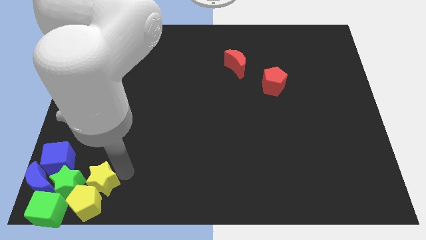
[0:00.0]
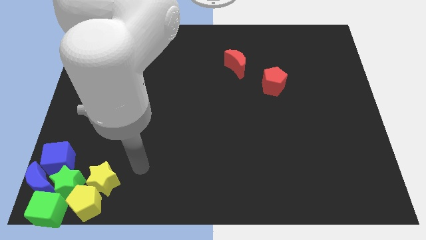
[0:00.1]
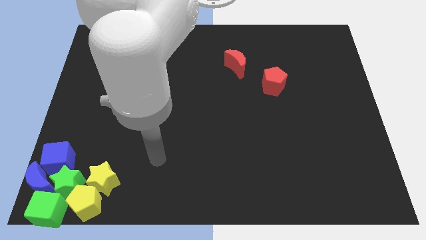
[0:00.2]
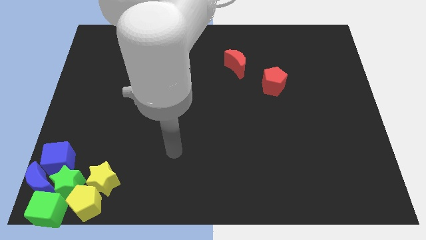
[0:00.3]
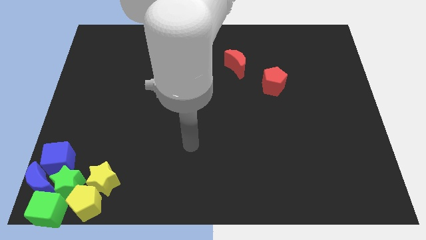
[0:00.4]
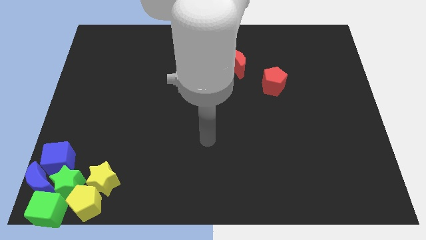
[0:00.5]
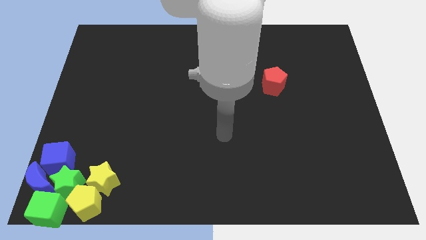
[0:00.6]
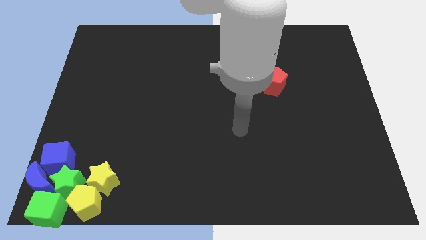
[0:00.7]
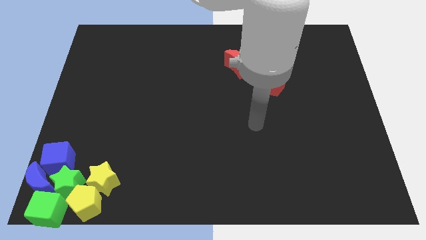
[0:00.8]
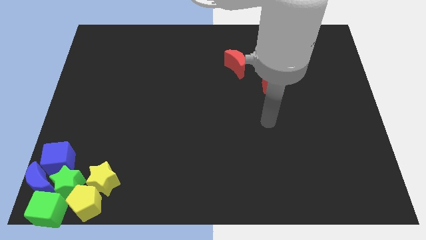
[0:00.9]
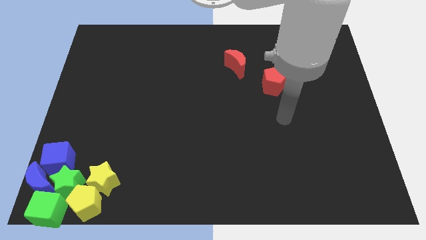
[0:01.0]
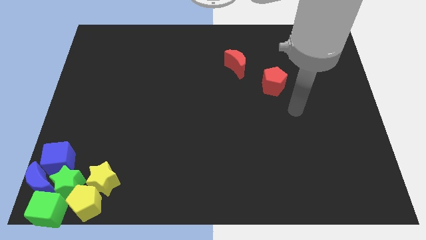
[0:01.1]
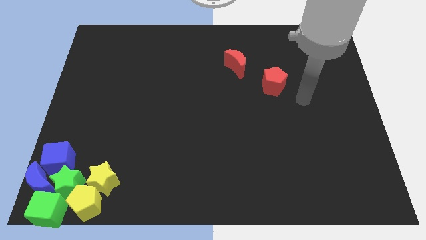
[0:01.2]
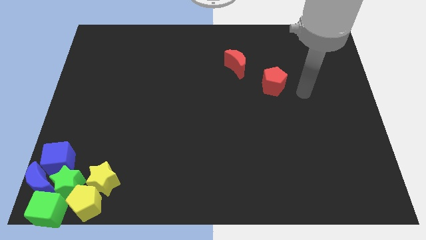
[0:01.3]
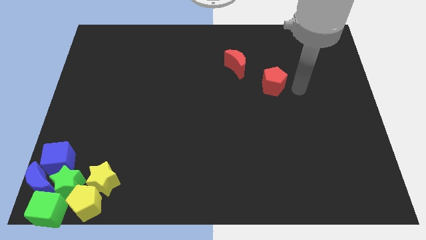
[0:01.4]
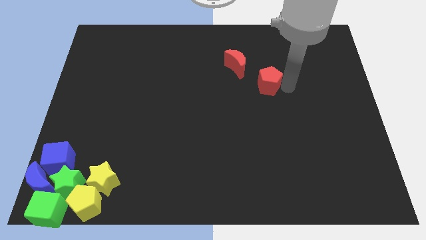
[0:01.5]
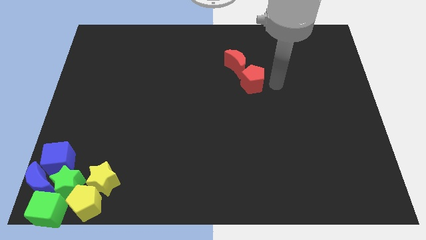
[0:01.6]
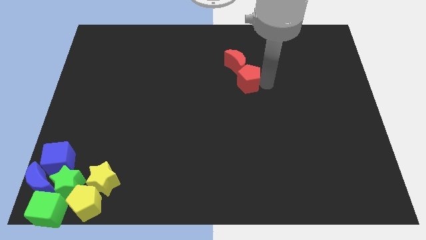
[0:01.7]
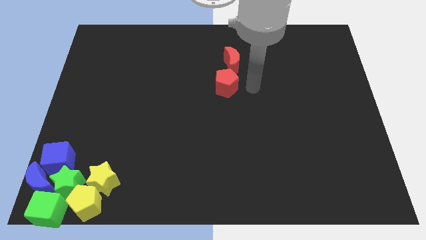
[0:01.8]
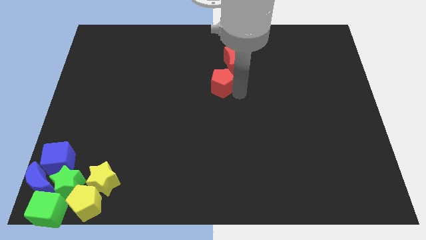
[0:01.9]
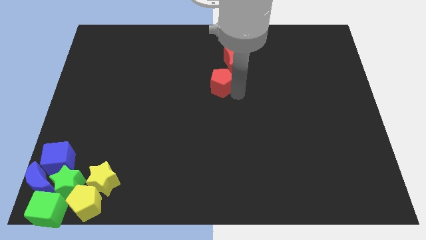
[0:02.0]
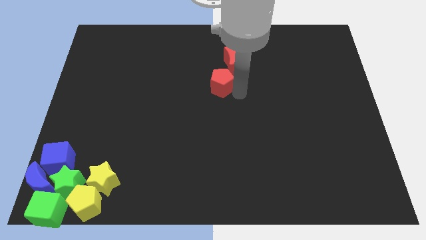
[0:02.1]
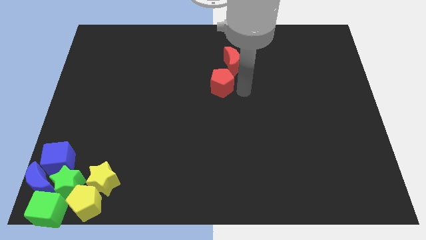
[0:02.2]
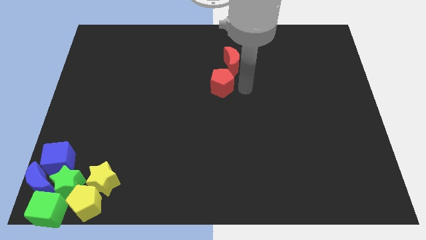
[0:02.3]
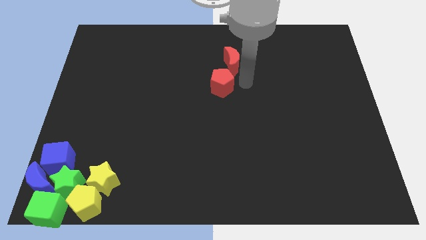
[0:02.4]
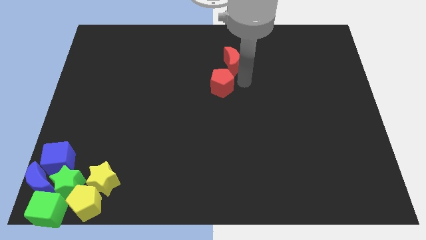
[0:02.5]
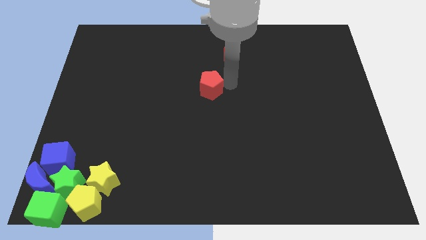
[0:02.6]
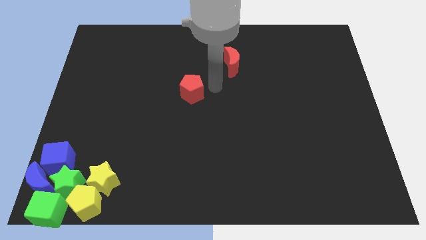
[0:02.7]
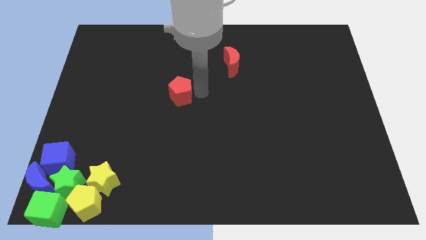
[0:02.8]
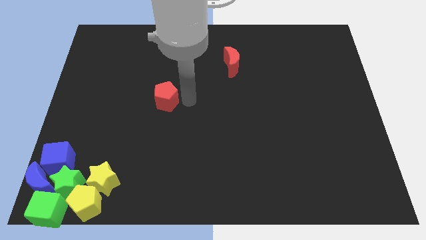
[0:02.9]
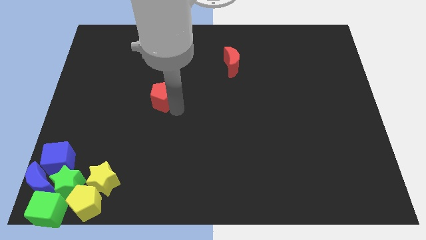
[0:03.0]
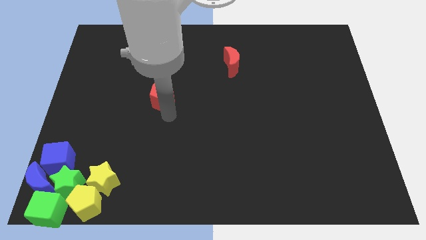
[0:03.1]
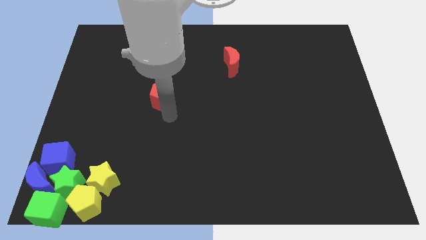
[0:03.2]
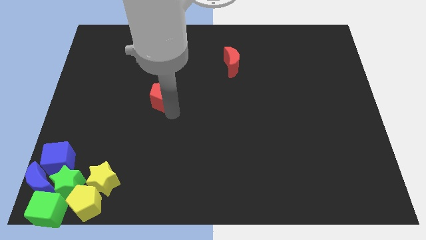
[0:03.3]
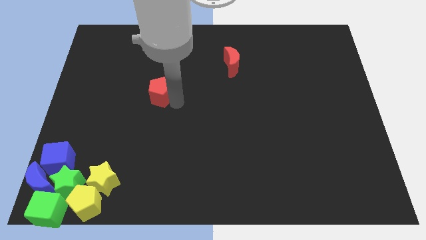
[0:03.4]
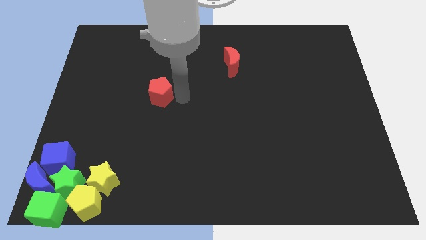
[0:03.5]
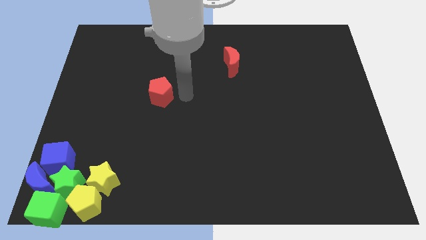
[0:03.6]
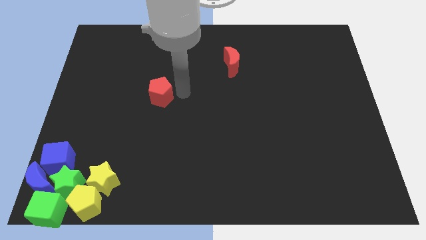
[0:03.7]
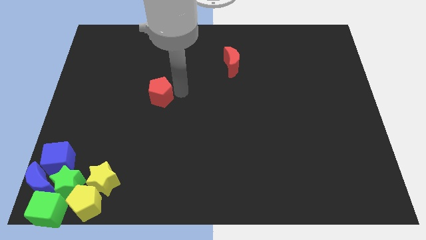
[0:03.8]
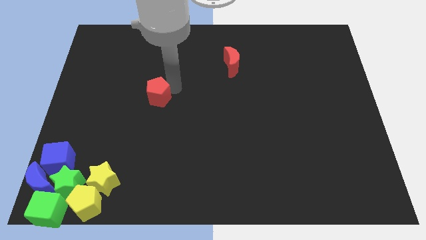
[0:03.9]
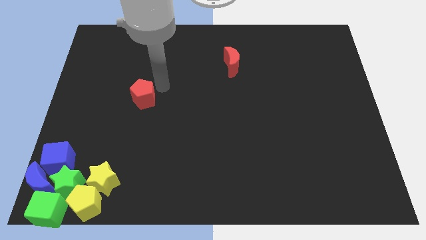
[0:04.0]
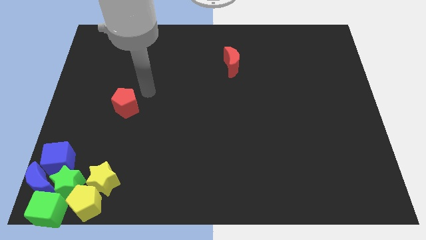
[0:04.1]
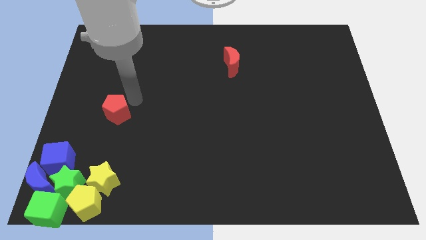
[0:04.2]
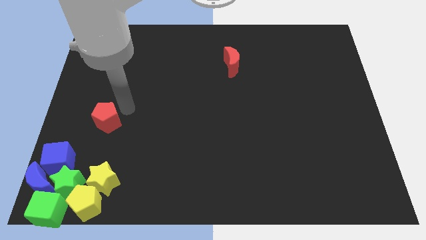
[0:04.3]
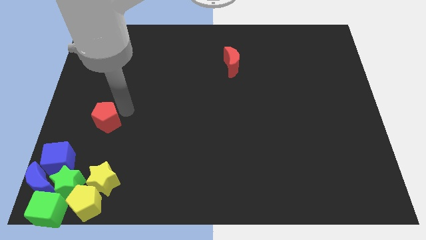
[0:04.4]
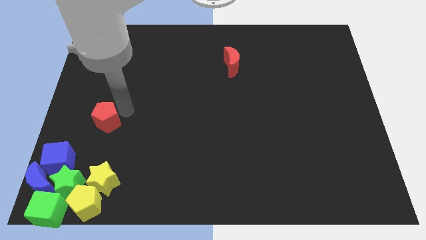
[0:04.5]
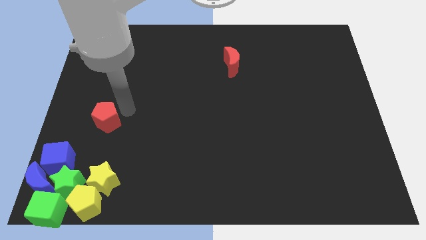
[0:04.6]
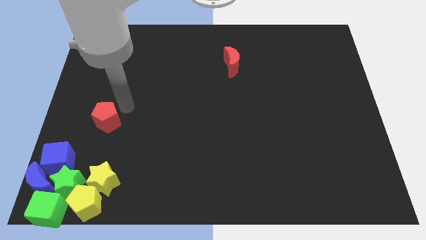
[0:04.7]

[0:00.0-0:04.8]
push the red pentagon vertically above the yellow star

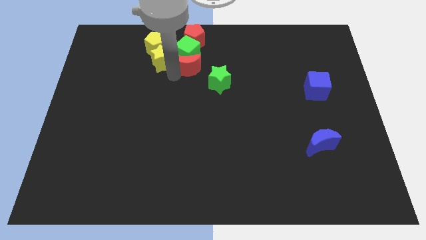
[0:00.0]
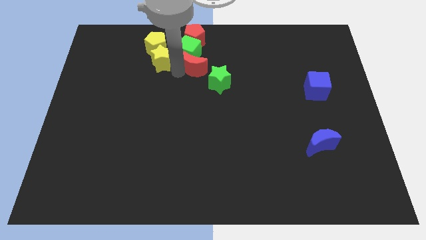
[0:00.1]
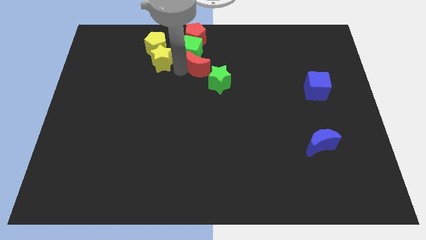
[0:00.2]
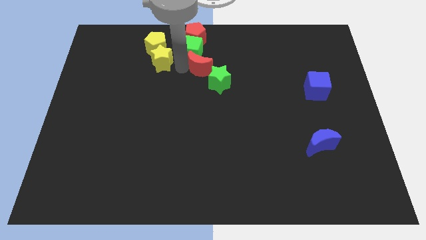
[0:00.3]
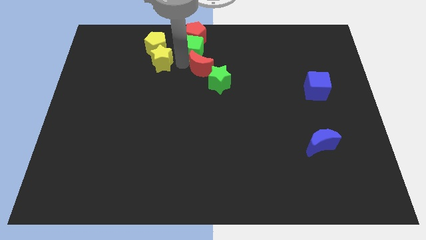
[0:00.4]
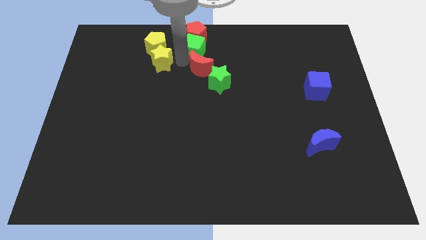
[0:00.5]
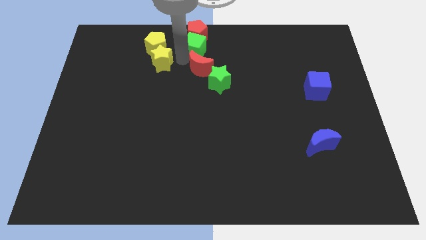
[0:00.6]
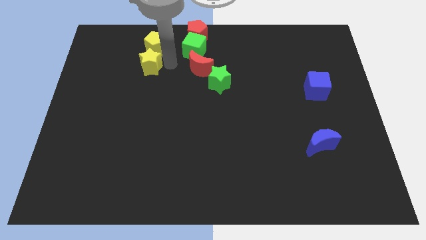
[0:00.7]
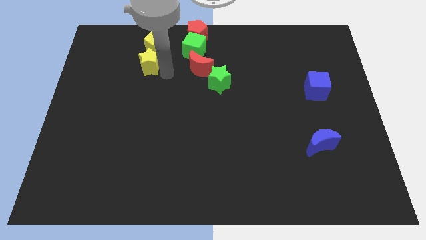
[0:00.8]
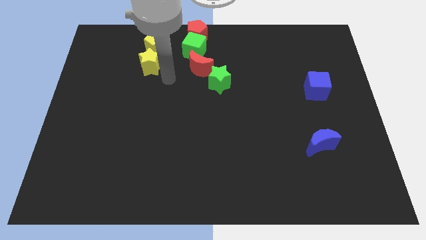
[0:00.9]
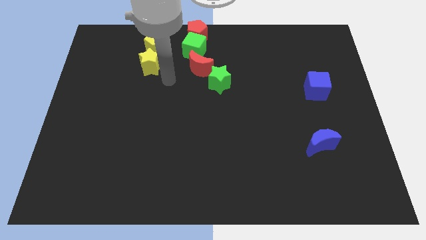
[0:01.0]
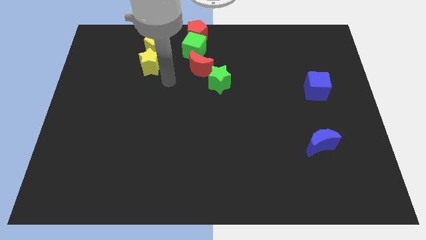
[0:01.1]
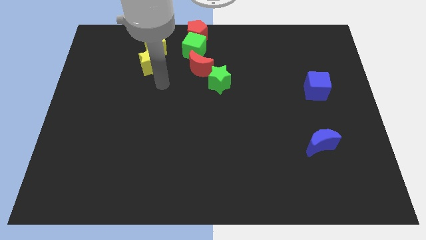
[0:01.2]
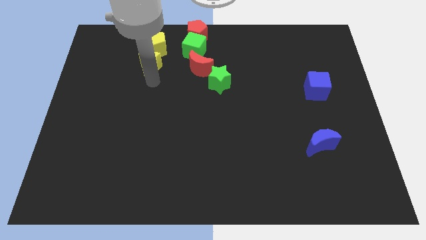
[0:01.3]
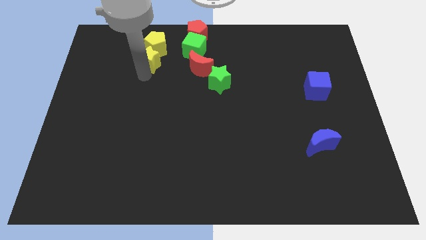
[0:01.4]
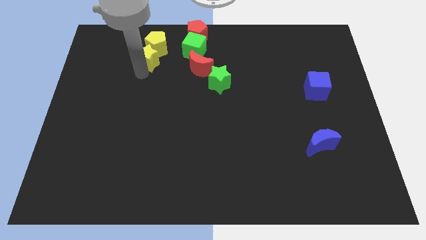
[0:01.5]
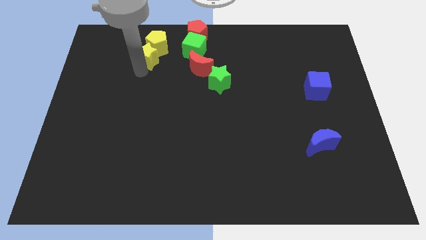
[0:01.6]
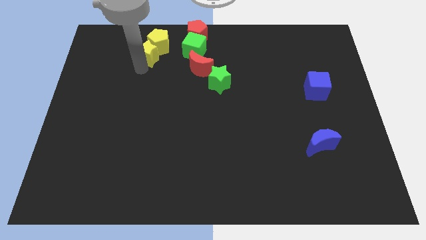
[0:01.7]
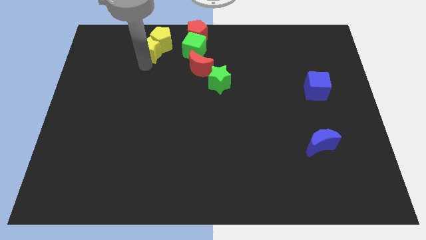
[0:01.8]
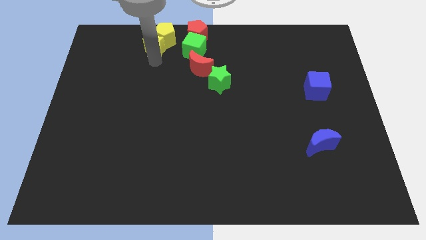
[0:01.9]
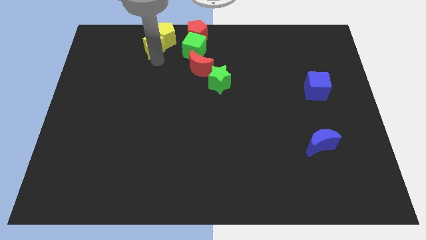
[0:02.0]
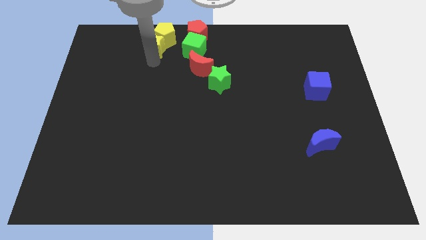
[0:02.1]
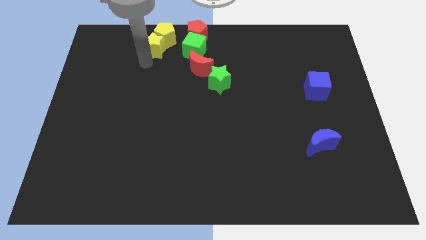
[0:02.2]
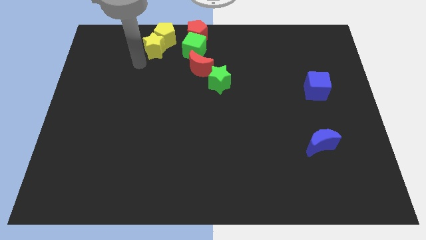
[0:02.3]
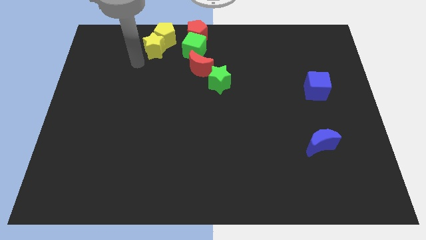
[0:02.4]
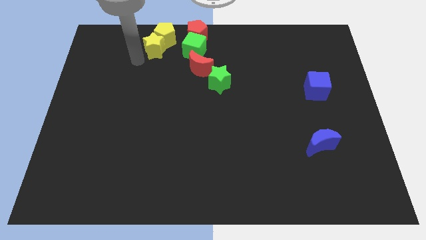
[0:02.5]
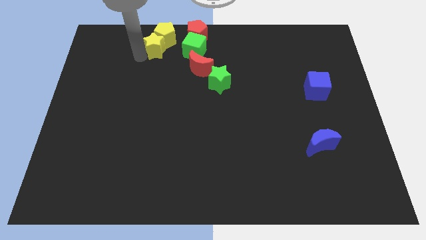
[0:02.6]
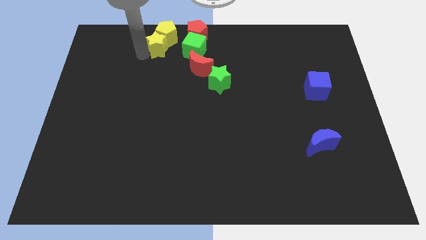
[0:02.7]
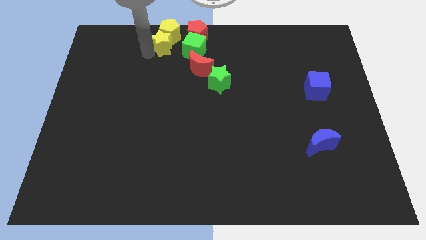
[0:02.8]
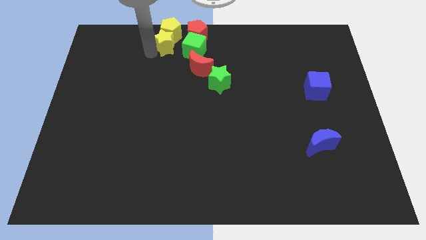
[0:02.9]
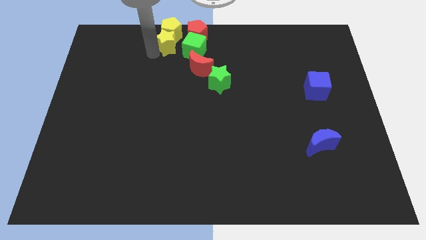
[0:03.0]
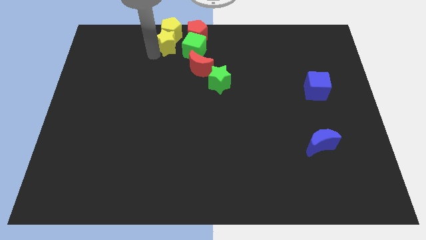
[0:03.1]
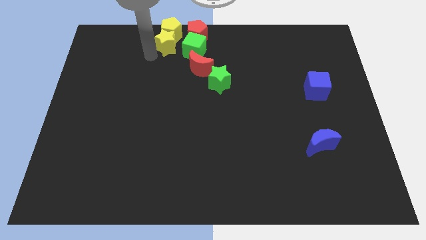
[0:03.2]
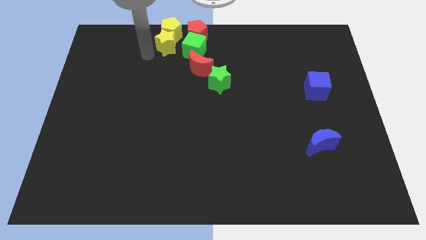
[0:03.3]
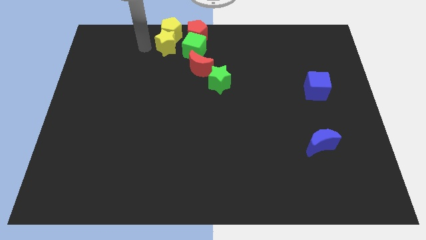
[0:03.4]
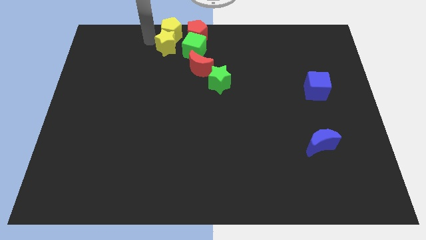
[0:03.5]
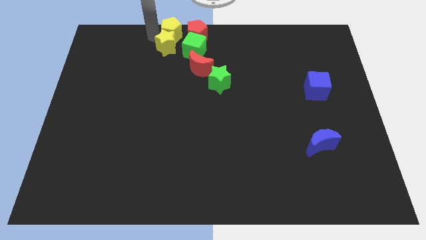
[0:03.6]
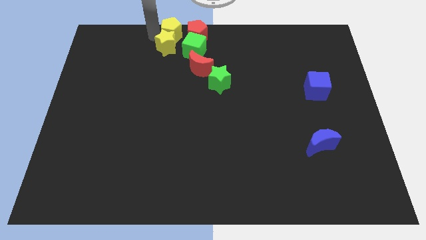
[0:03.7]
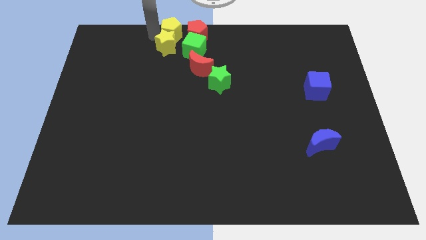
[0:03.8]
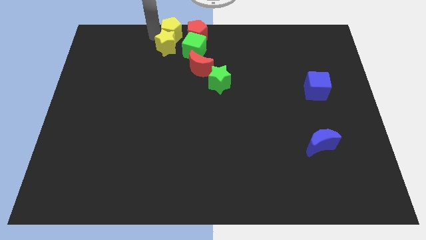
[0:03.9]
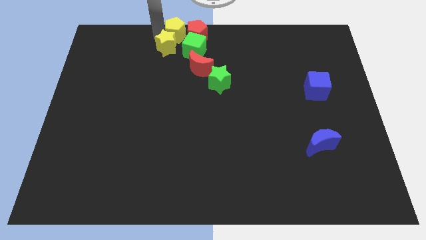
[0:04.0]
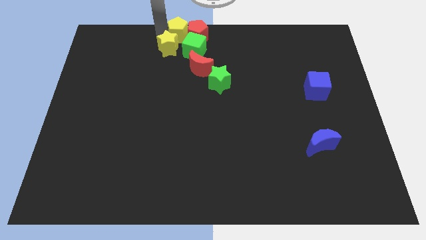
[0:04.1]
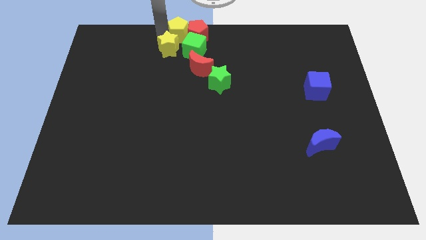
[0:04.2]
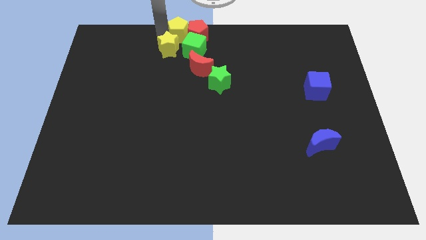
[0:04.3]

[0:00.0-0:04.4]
push the yellow star away from the red crescent
